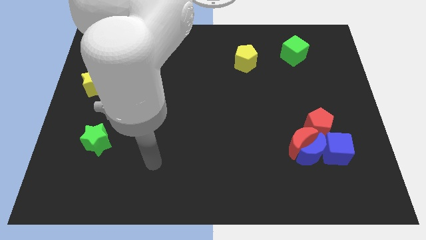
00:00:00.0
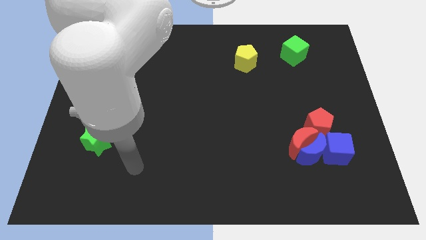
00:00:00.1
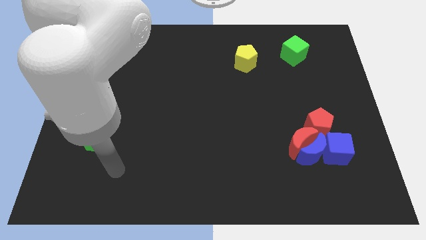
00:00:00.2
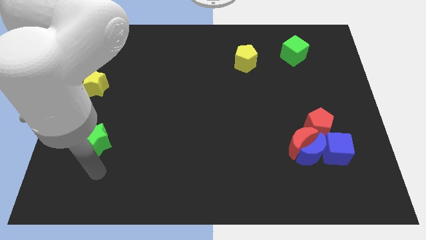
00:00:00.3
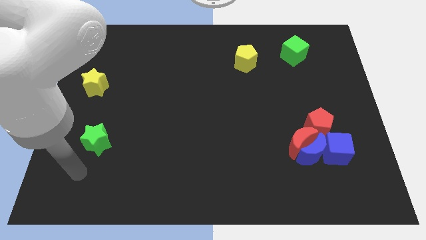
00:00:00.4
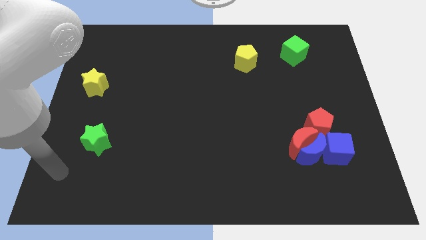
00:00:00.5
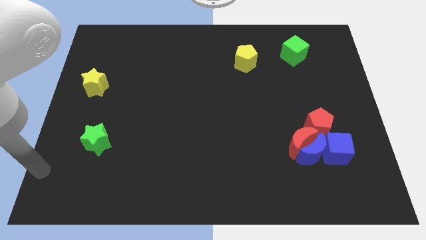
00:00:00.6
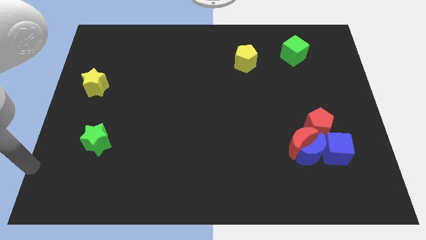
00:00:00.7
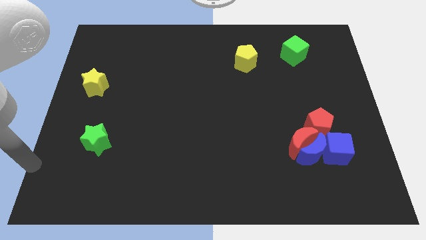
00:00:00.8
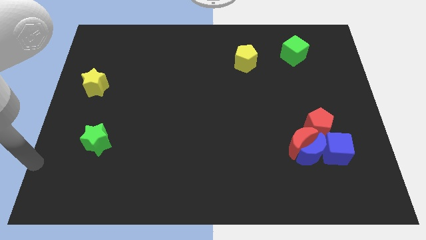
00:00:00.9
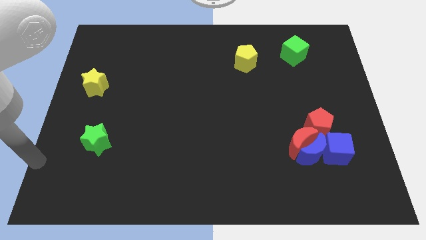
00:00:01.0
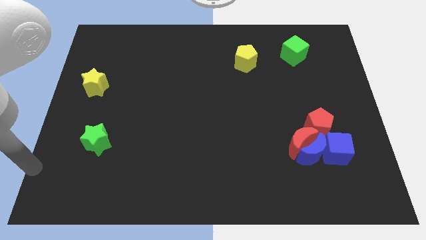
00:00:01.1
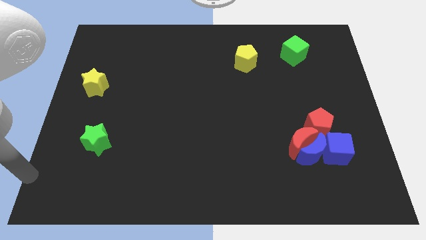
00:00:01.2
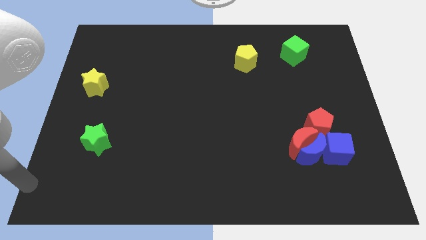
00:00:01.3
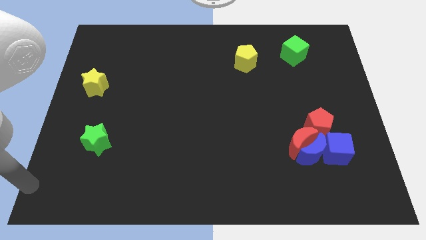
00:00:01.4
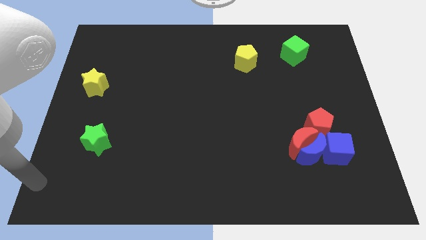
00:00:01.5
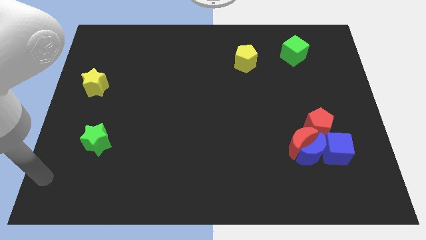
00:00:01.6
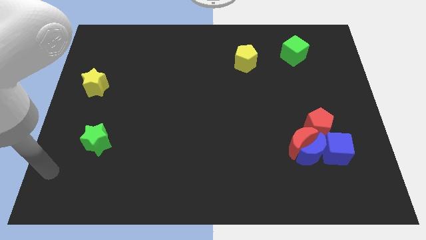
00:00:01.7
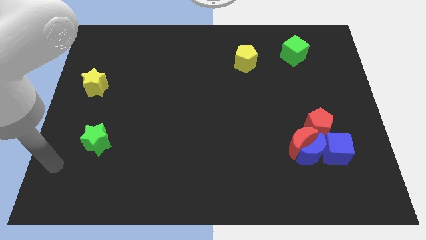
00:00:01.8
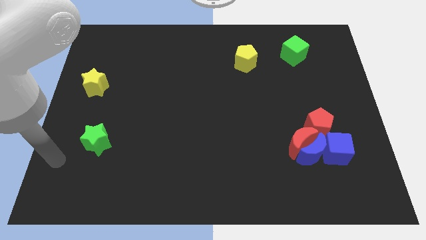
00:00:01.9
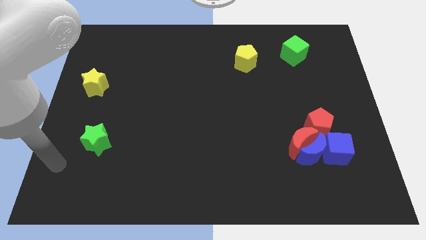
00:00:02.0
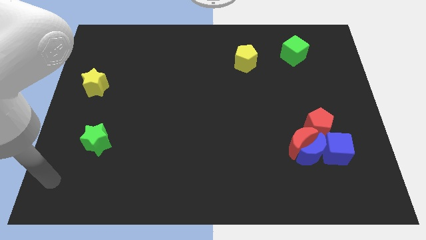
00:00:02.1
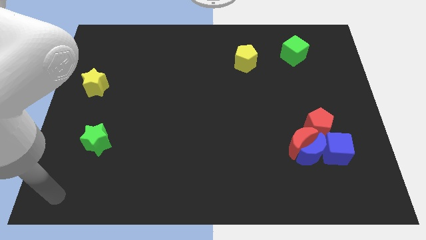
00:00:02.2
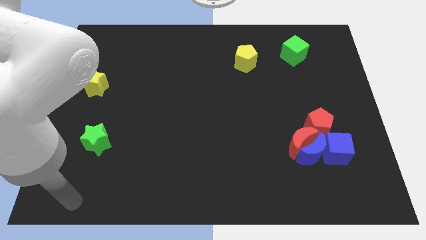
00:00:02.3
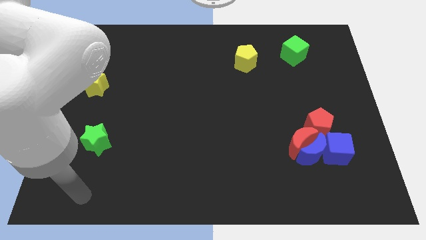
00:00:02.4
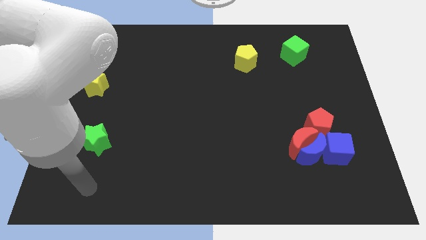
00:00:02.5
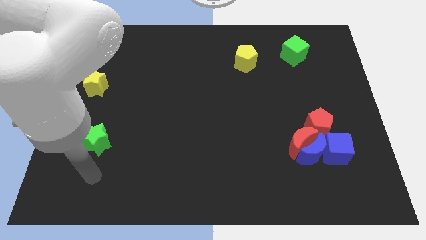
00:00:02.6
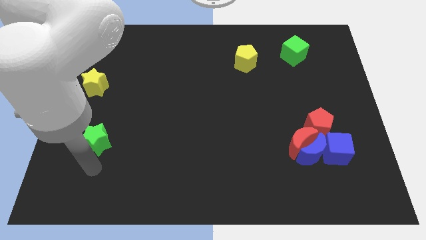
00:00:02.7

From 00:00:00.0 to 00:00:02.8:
point your arm at the bottom of green star

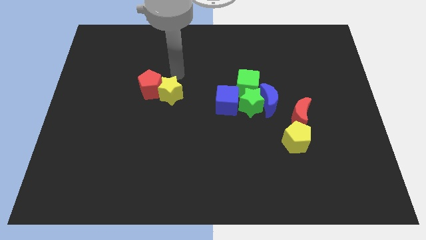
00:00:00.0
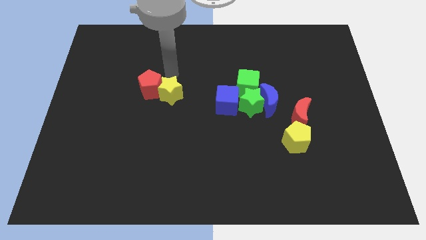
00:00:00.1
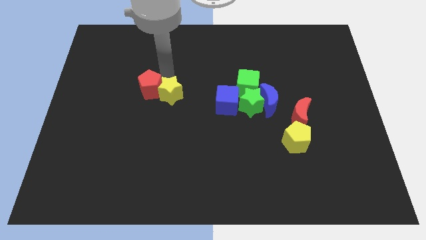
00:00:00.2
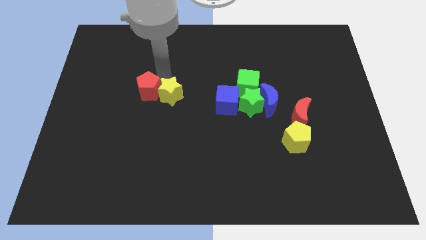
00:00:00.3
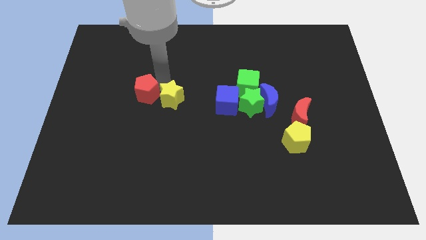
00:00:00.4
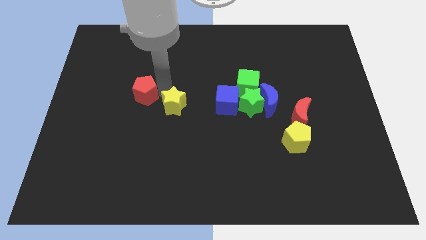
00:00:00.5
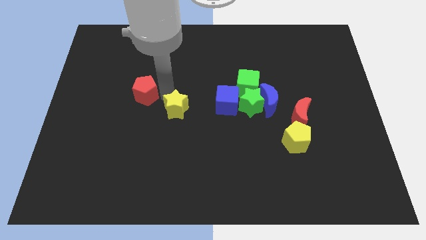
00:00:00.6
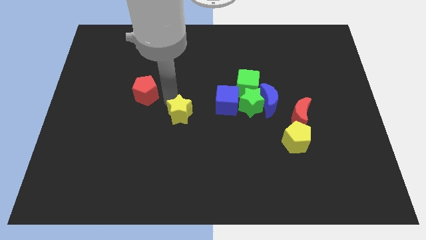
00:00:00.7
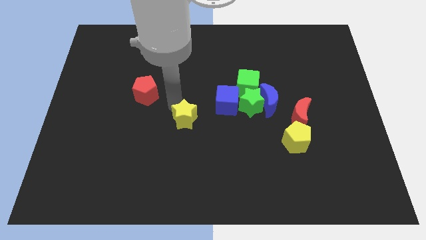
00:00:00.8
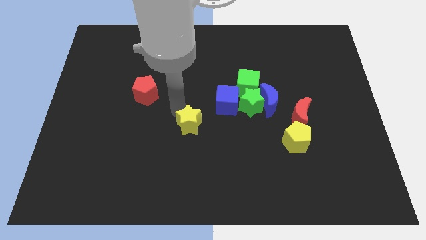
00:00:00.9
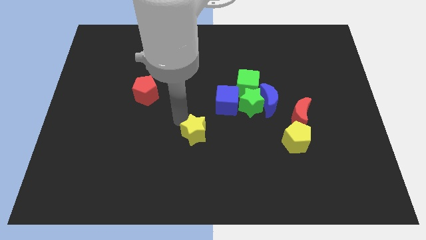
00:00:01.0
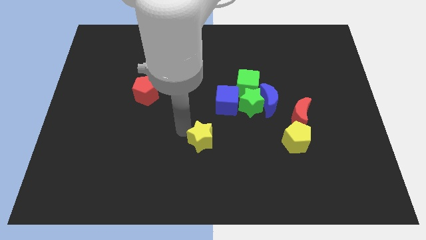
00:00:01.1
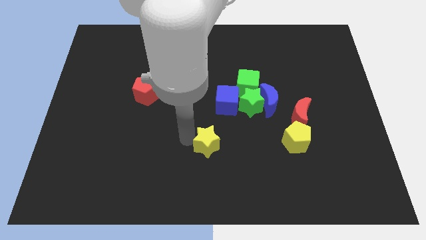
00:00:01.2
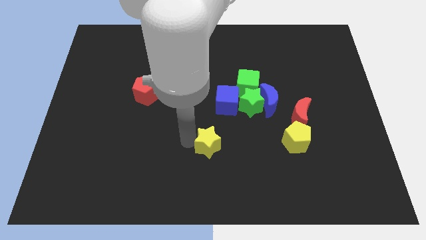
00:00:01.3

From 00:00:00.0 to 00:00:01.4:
separate the yellow star from the red pentagon

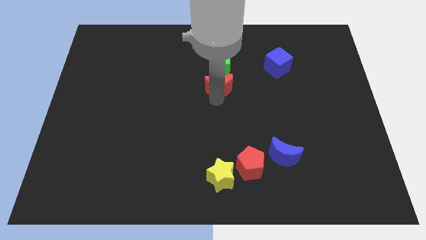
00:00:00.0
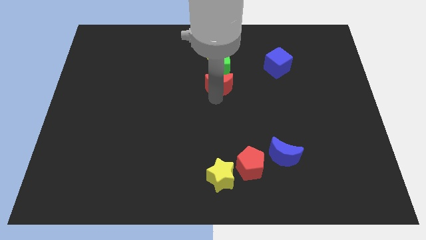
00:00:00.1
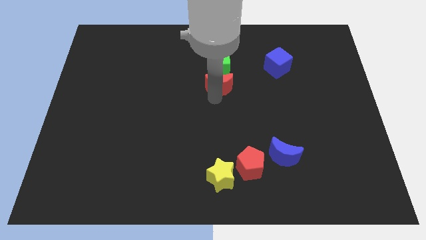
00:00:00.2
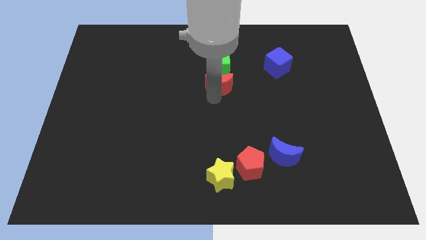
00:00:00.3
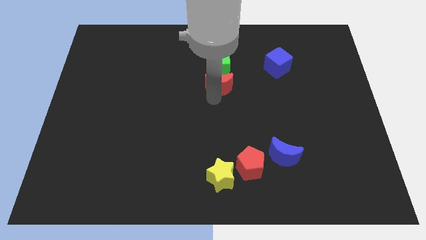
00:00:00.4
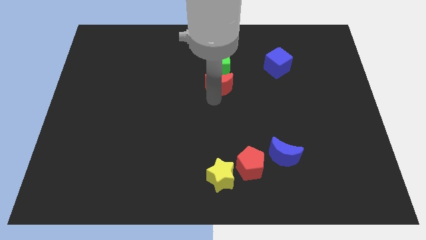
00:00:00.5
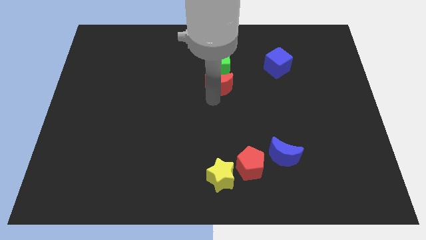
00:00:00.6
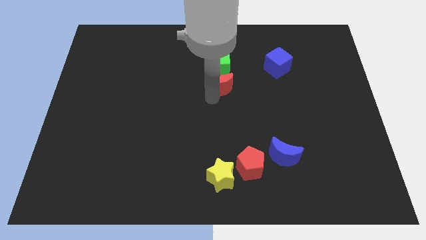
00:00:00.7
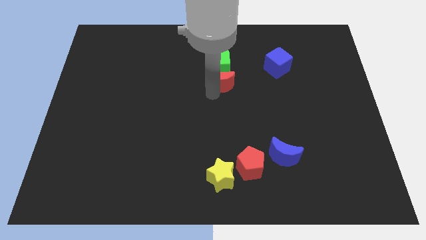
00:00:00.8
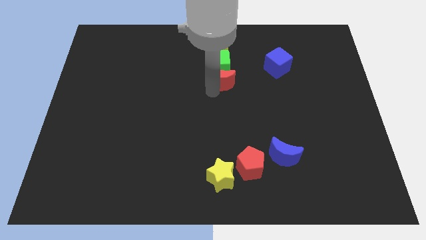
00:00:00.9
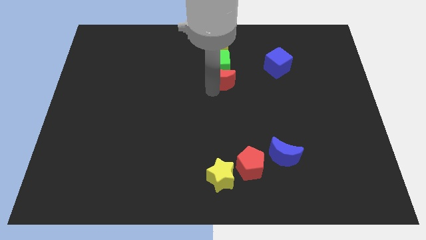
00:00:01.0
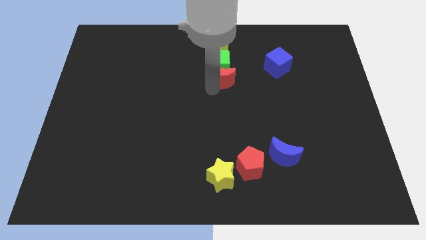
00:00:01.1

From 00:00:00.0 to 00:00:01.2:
push the red crescent into the green cube

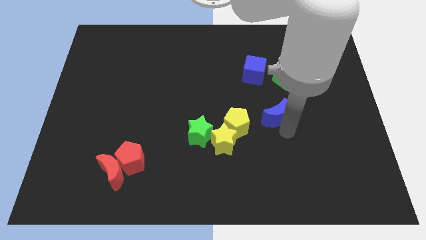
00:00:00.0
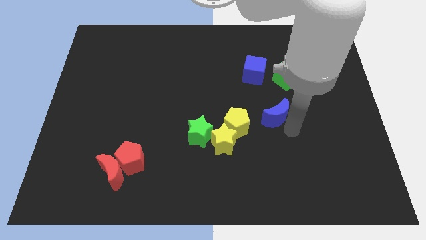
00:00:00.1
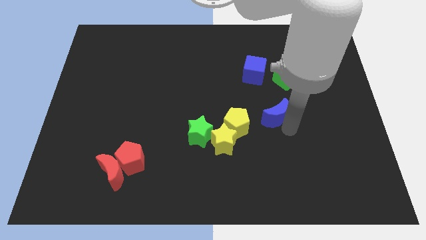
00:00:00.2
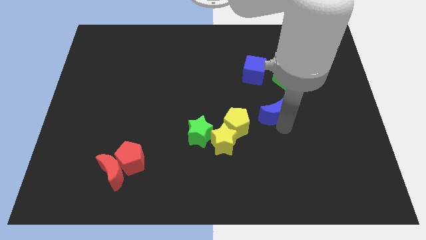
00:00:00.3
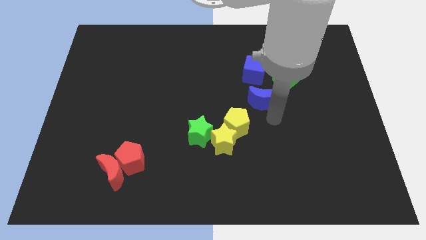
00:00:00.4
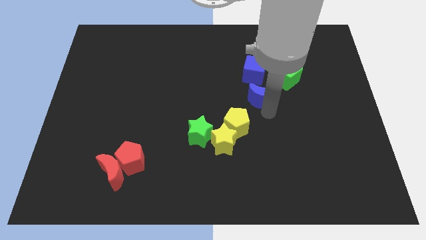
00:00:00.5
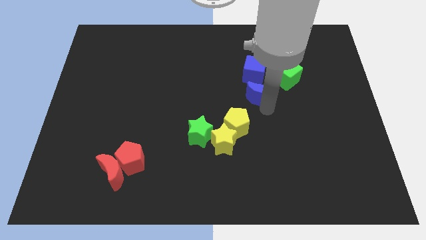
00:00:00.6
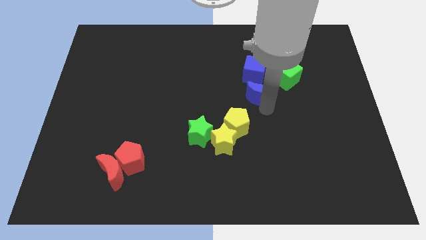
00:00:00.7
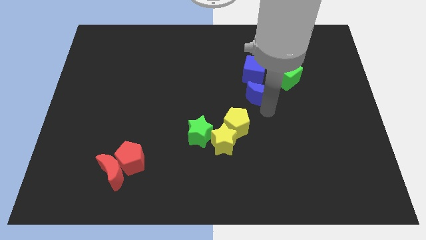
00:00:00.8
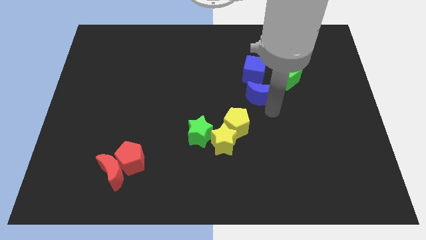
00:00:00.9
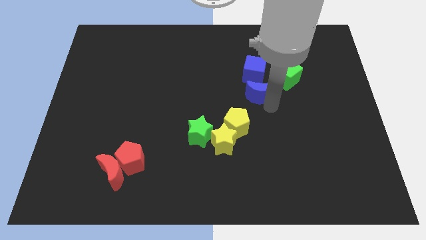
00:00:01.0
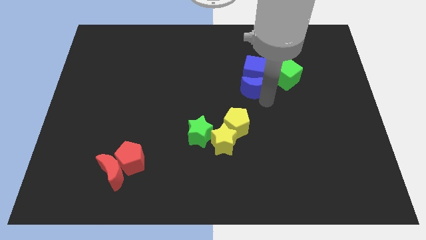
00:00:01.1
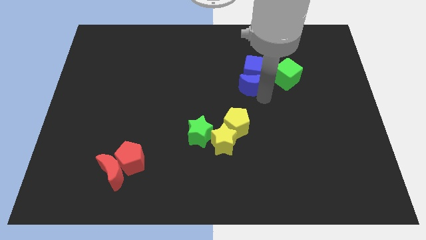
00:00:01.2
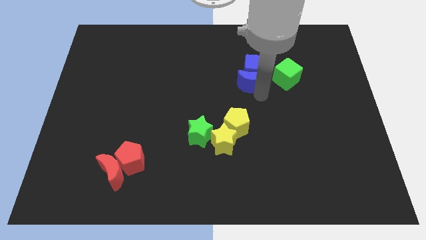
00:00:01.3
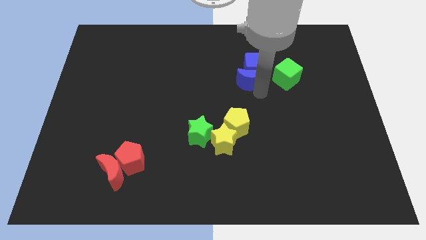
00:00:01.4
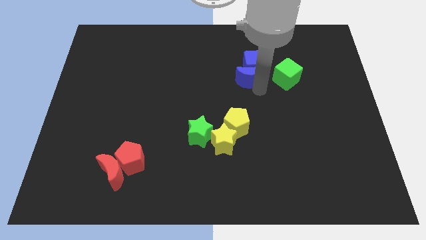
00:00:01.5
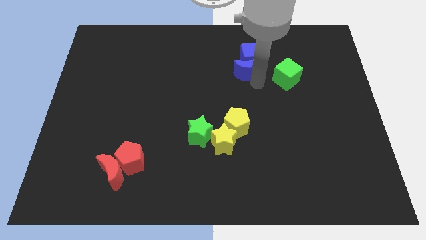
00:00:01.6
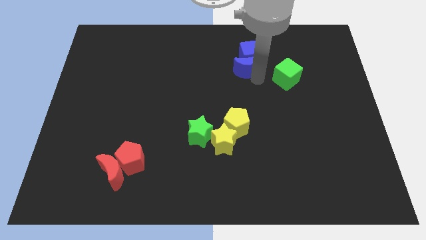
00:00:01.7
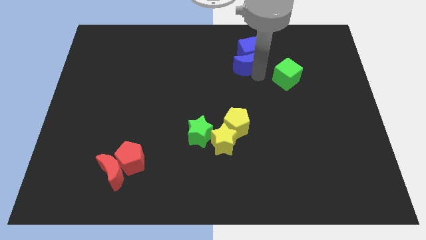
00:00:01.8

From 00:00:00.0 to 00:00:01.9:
push the blue crescent close to the blue cube

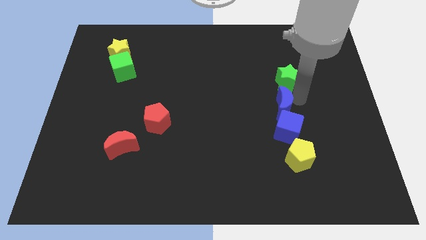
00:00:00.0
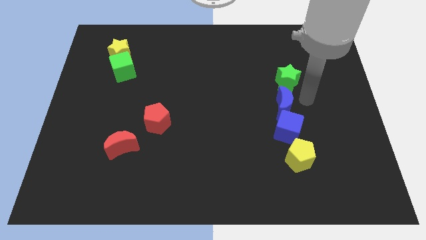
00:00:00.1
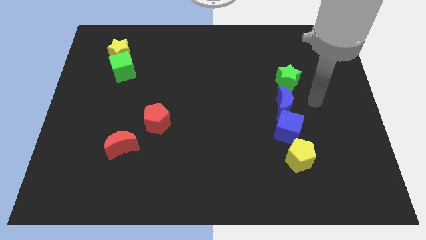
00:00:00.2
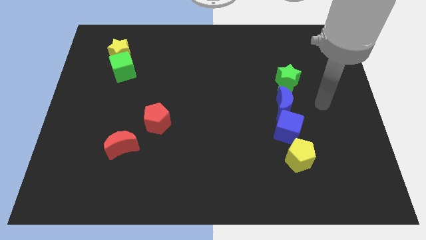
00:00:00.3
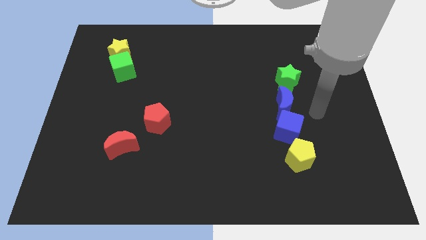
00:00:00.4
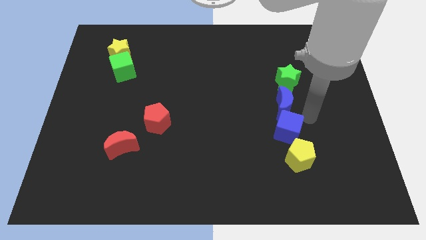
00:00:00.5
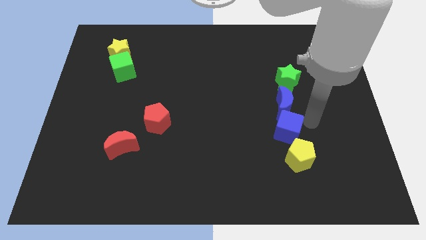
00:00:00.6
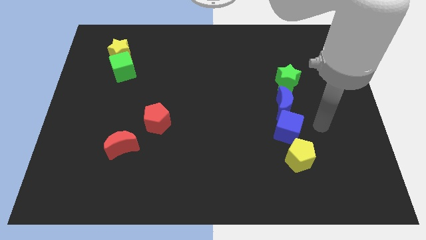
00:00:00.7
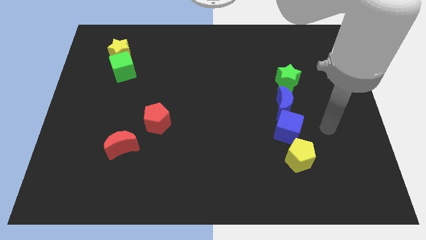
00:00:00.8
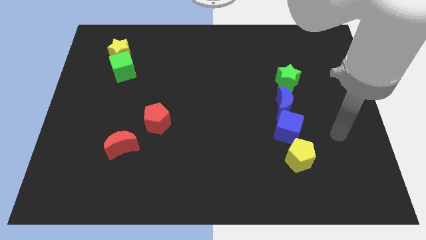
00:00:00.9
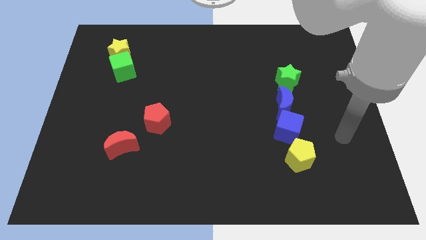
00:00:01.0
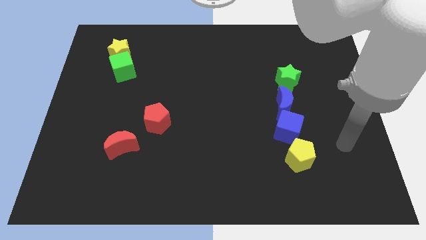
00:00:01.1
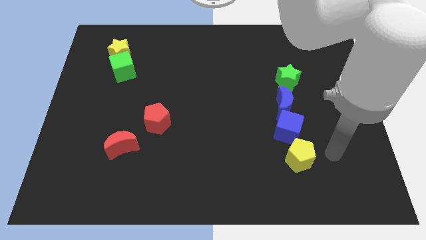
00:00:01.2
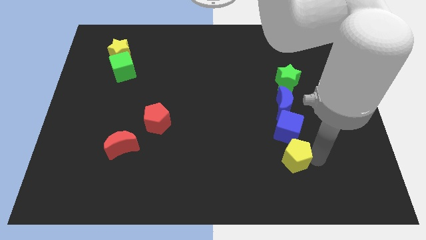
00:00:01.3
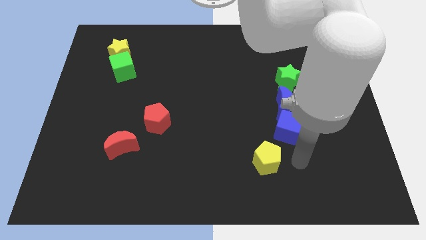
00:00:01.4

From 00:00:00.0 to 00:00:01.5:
place the arm right to the yellow pentagon

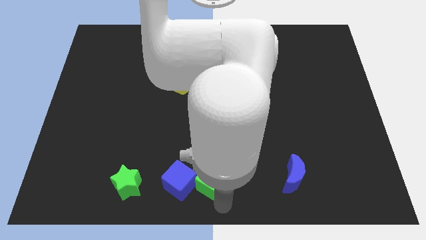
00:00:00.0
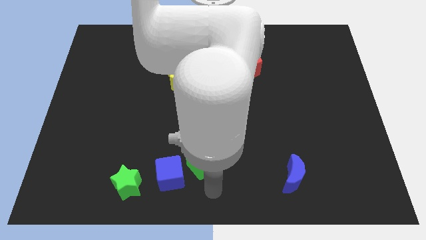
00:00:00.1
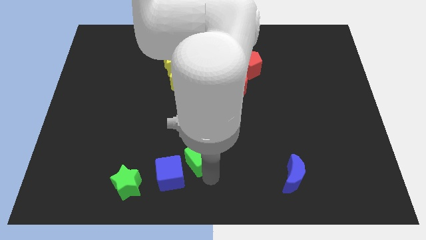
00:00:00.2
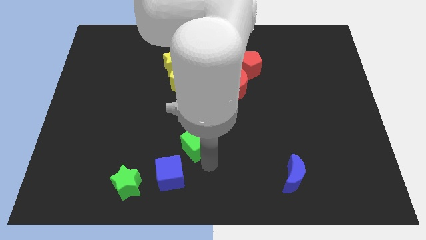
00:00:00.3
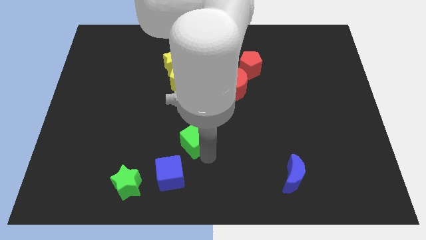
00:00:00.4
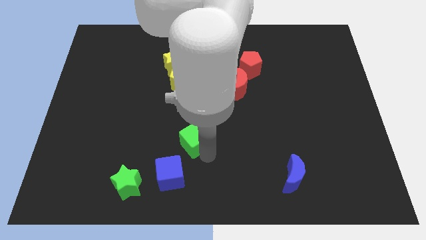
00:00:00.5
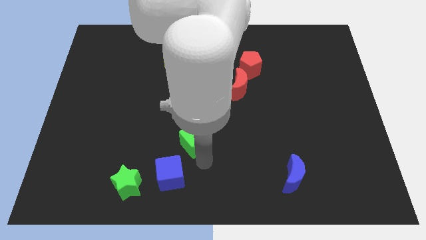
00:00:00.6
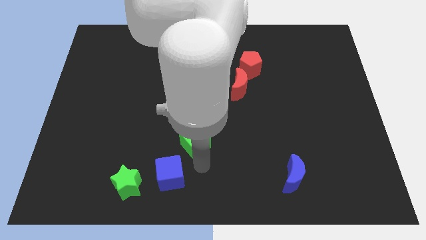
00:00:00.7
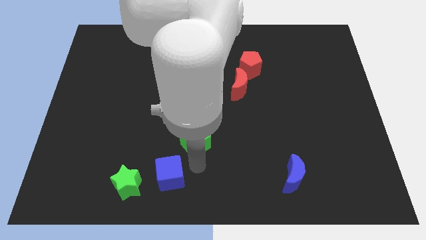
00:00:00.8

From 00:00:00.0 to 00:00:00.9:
push the green star towards the center of the board
